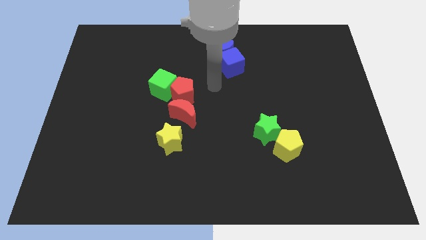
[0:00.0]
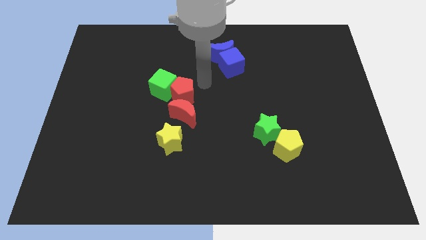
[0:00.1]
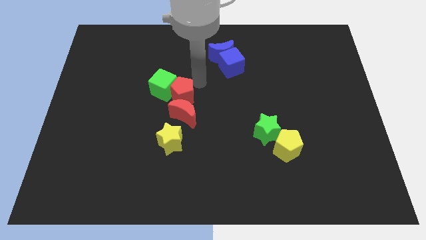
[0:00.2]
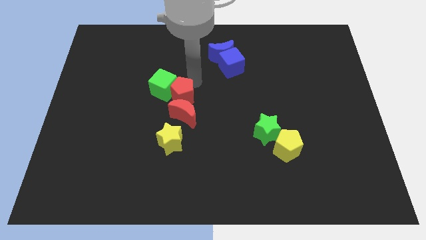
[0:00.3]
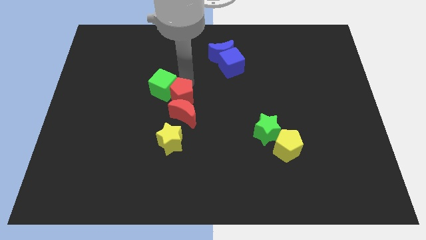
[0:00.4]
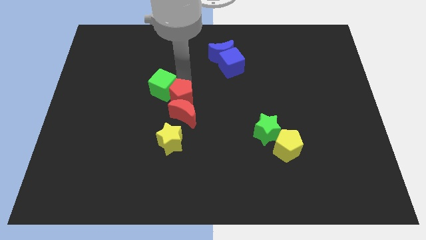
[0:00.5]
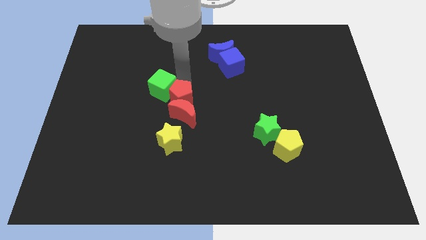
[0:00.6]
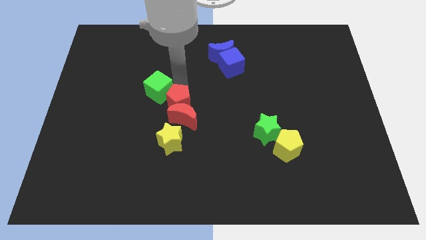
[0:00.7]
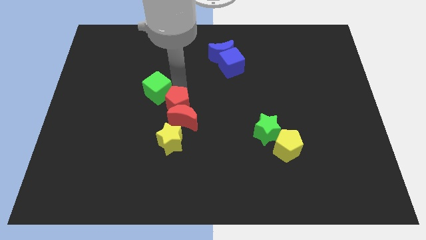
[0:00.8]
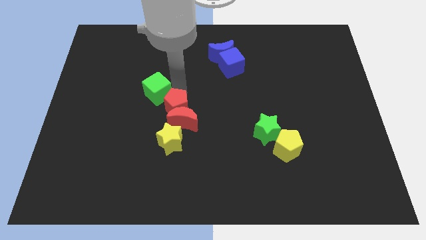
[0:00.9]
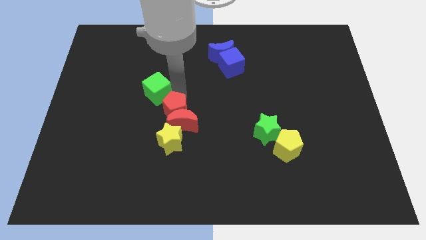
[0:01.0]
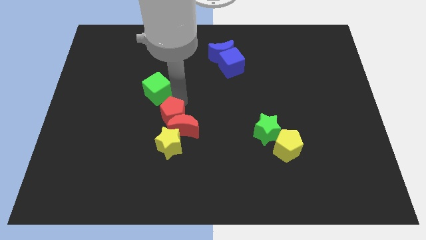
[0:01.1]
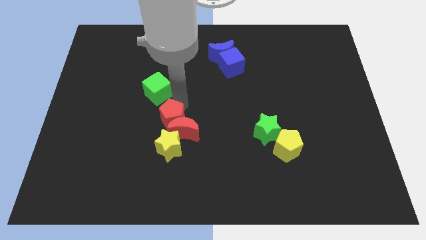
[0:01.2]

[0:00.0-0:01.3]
move the pentagon into the red moon

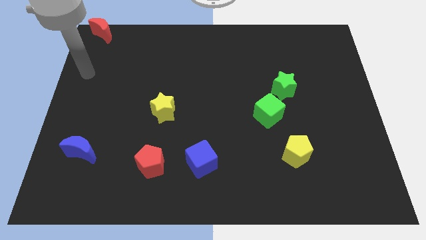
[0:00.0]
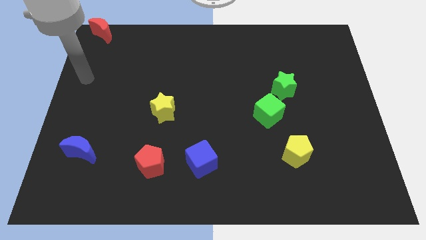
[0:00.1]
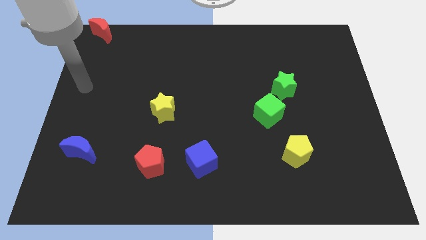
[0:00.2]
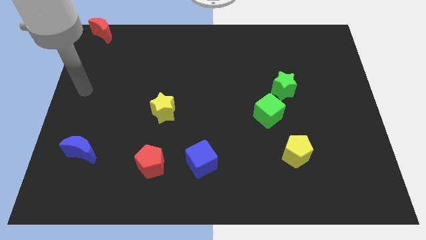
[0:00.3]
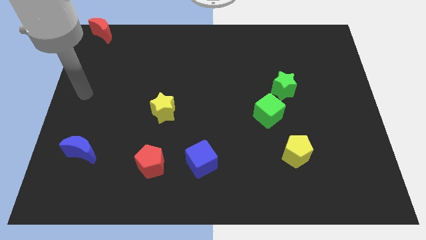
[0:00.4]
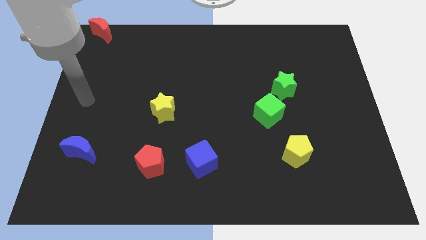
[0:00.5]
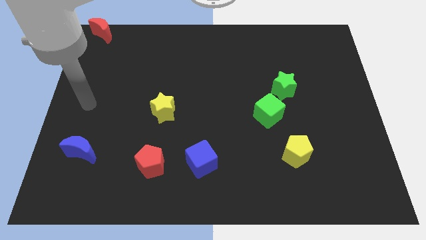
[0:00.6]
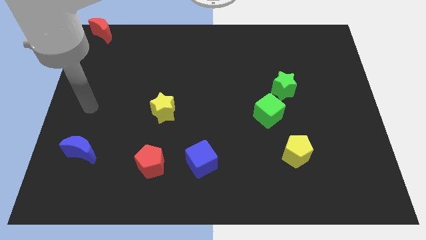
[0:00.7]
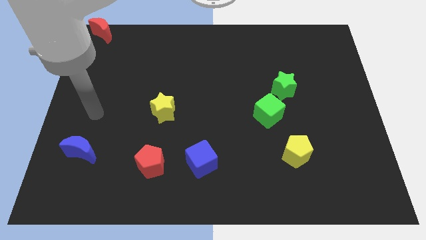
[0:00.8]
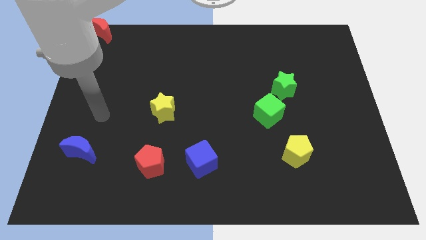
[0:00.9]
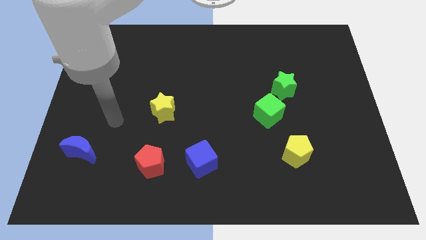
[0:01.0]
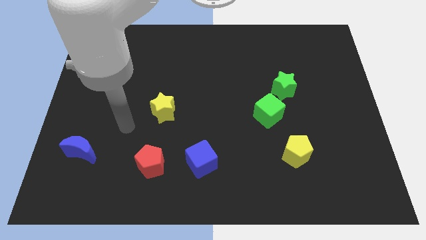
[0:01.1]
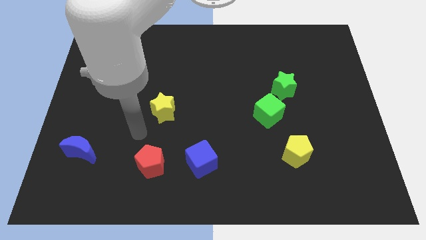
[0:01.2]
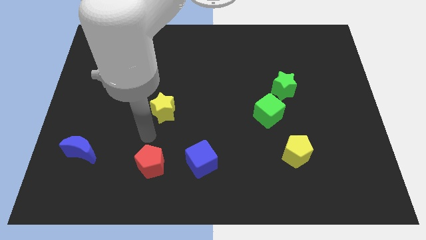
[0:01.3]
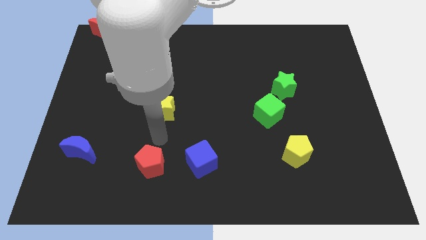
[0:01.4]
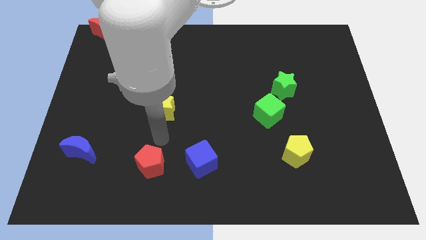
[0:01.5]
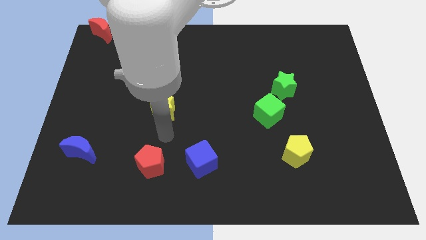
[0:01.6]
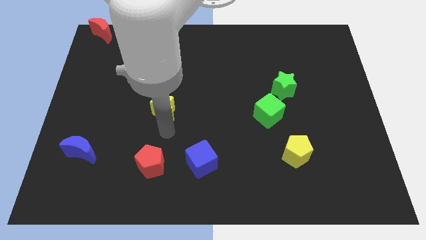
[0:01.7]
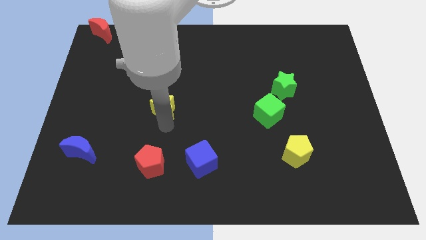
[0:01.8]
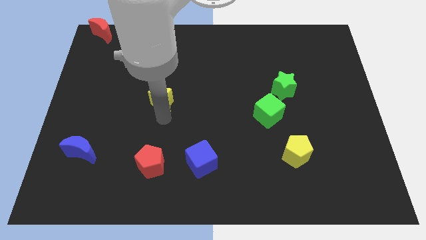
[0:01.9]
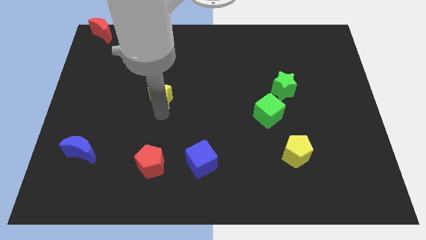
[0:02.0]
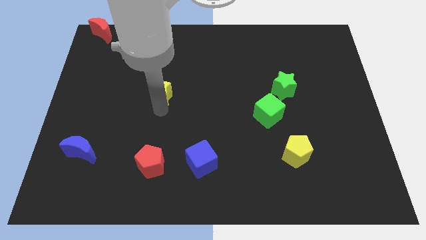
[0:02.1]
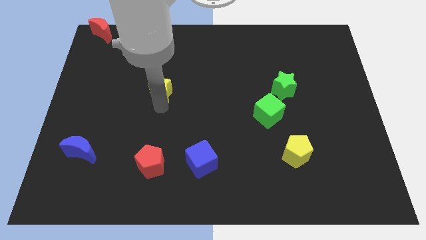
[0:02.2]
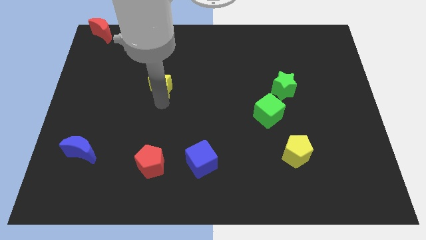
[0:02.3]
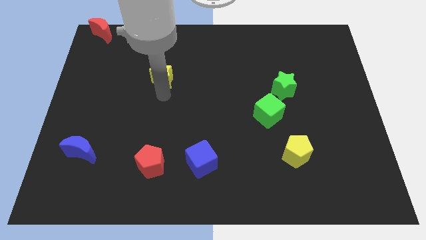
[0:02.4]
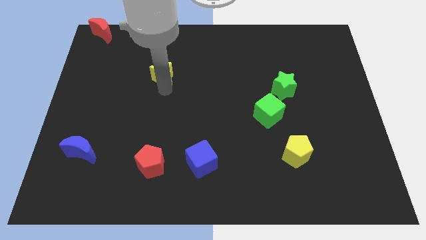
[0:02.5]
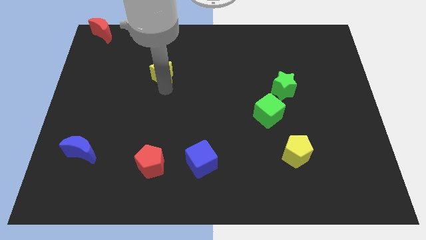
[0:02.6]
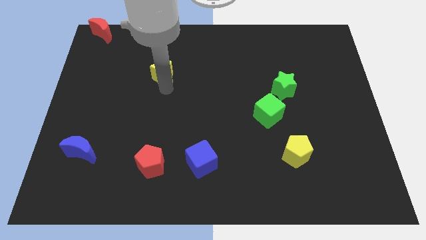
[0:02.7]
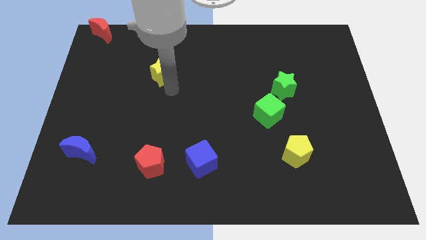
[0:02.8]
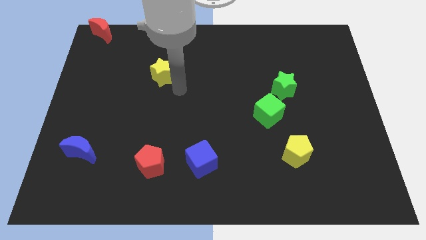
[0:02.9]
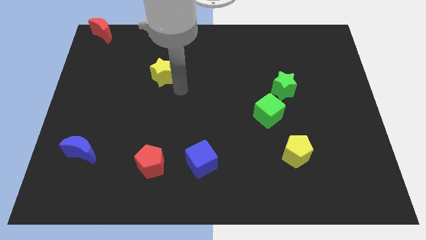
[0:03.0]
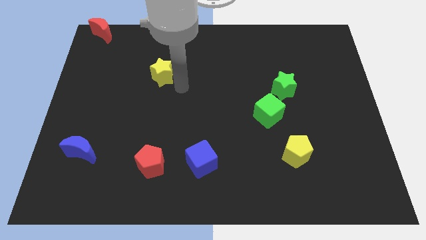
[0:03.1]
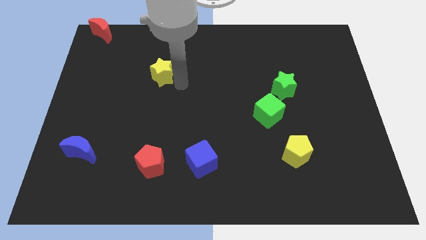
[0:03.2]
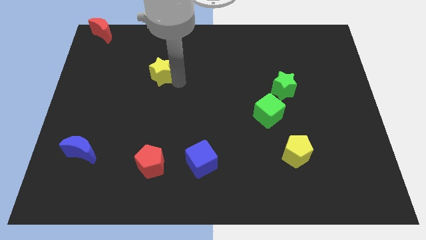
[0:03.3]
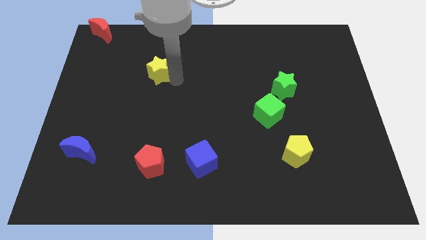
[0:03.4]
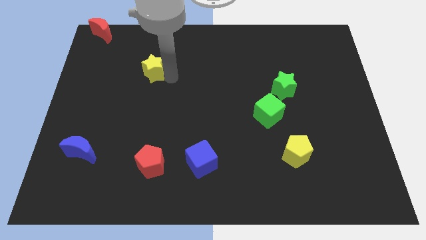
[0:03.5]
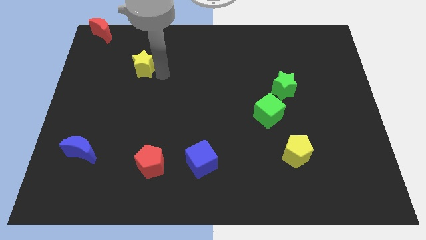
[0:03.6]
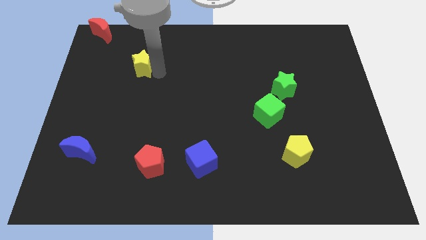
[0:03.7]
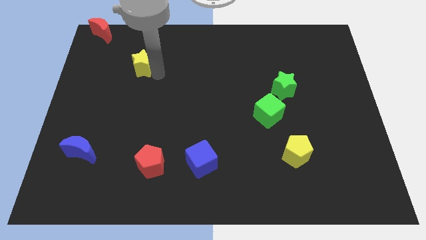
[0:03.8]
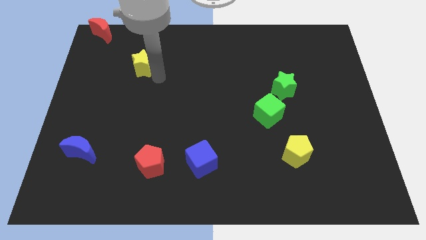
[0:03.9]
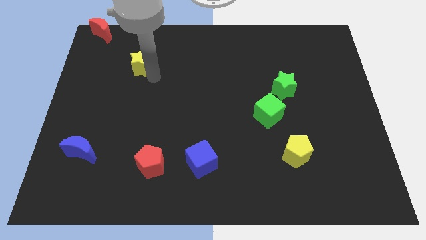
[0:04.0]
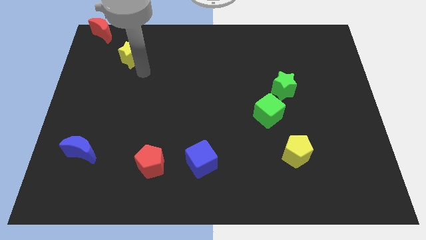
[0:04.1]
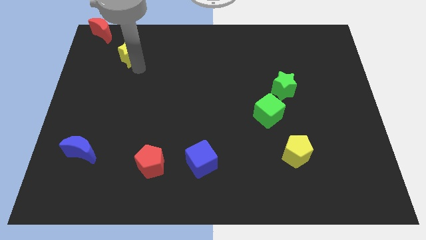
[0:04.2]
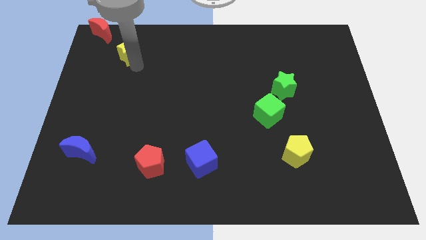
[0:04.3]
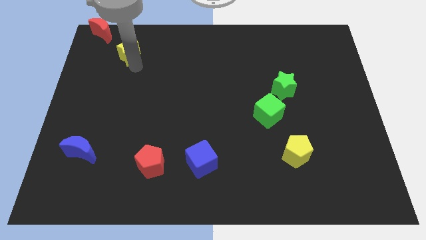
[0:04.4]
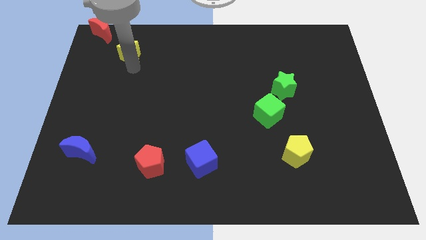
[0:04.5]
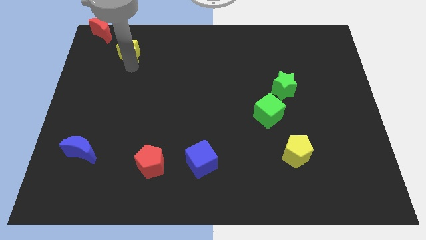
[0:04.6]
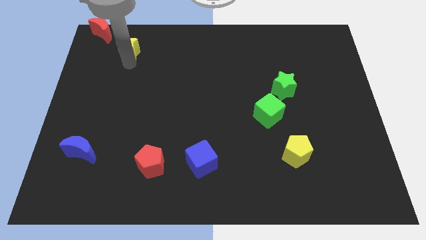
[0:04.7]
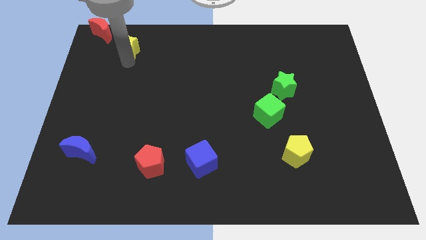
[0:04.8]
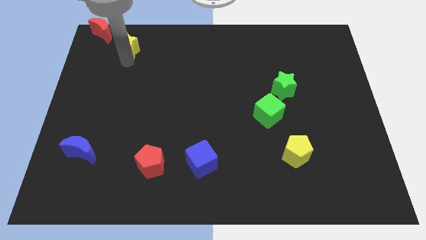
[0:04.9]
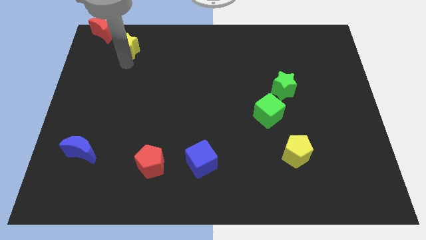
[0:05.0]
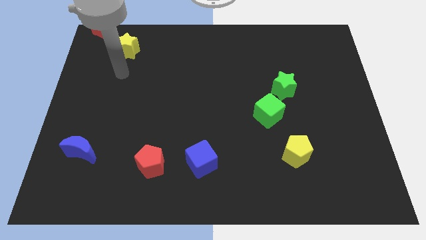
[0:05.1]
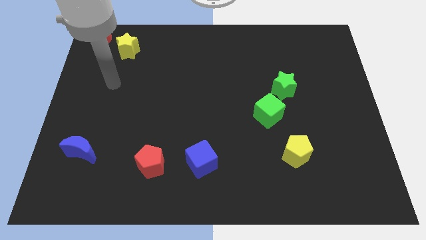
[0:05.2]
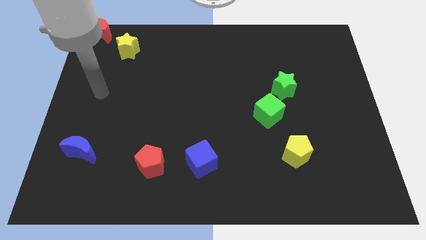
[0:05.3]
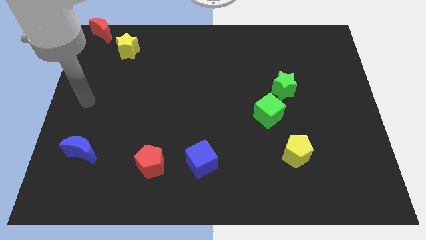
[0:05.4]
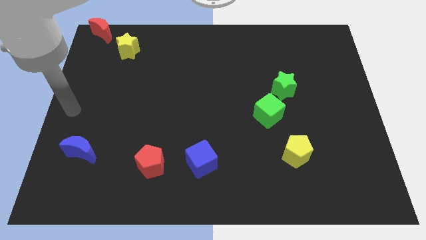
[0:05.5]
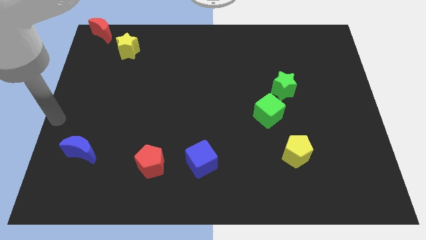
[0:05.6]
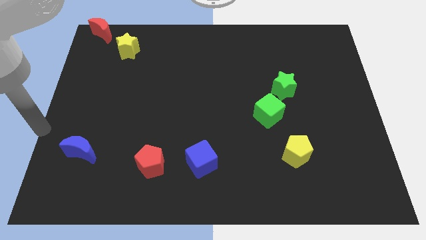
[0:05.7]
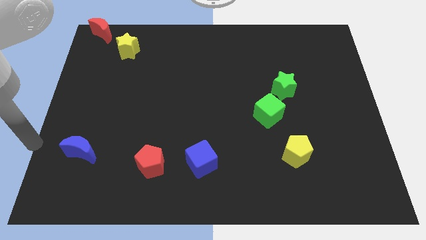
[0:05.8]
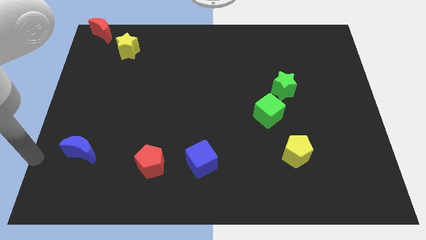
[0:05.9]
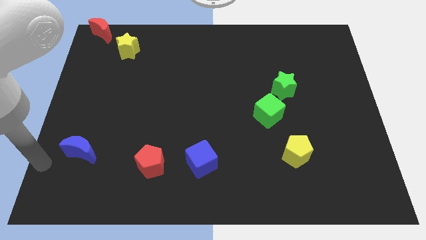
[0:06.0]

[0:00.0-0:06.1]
move yellow star diagonally below the red moon

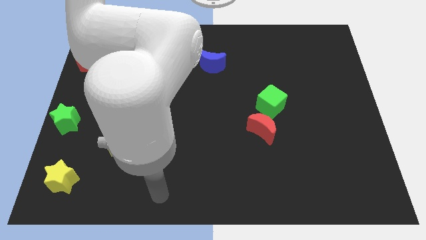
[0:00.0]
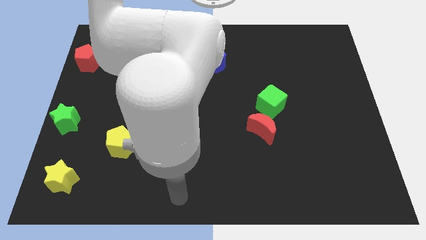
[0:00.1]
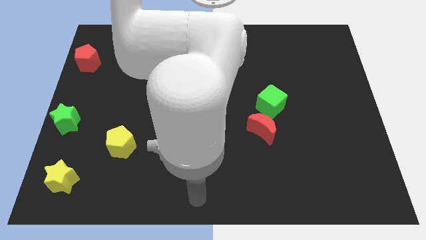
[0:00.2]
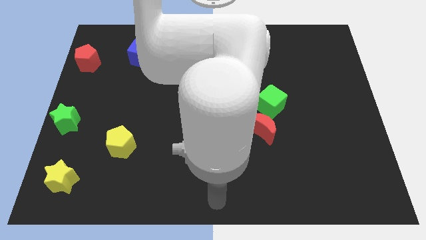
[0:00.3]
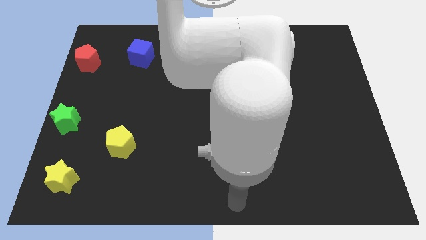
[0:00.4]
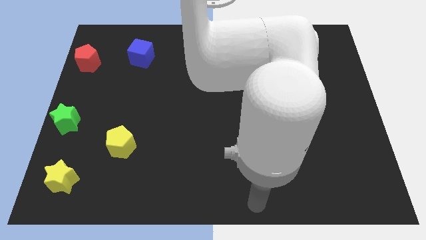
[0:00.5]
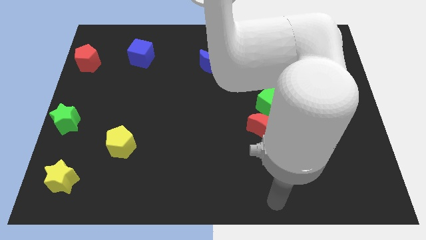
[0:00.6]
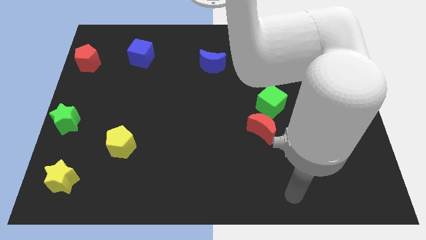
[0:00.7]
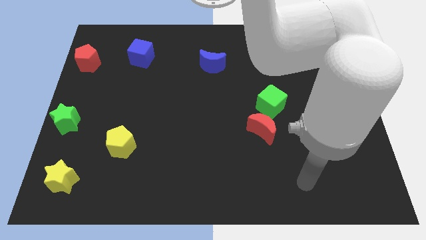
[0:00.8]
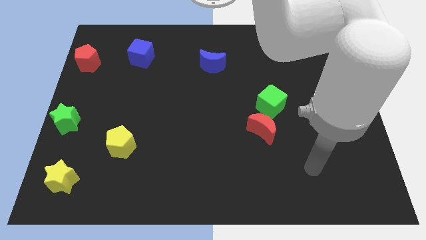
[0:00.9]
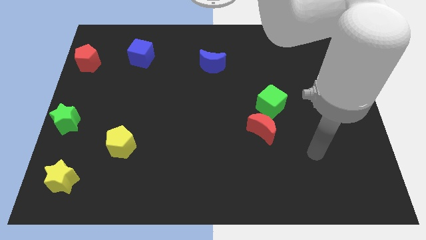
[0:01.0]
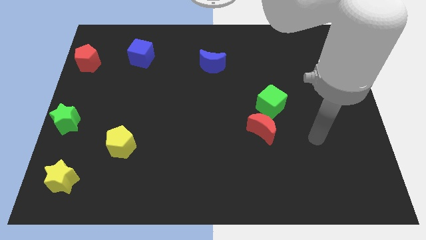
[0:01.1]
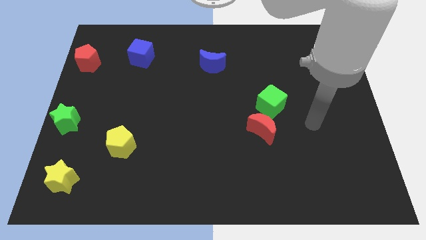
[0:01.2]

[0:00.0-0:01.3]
point the arm to the right of the red moon

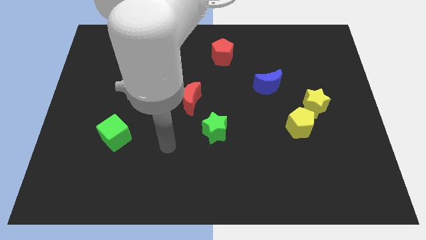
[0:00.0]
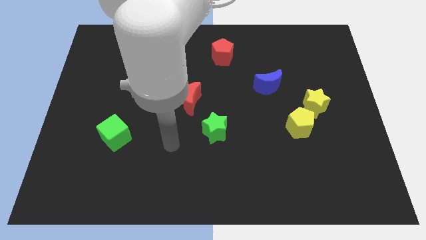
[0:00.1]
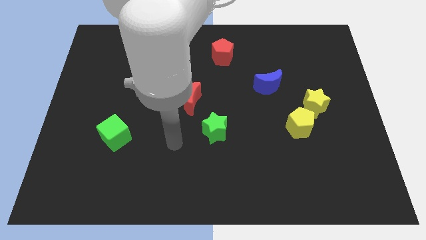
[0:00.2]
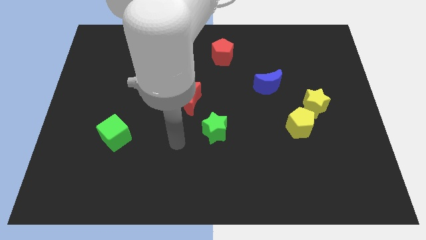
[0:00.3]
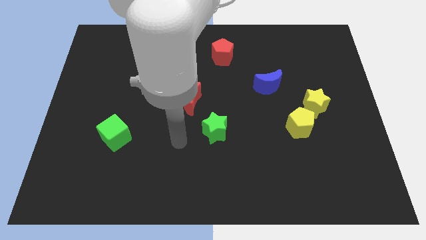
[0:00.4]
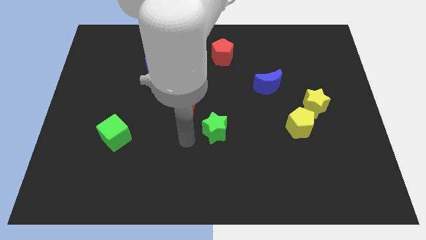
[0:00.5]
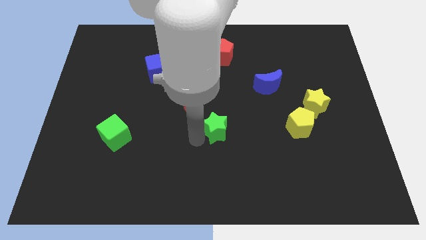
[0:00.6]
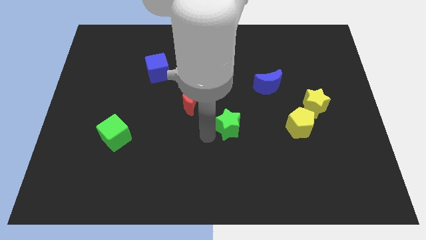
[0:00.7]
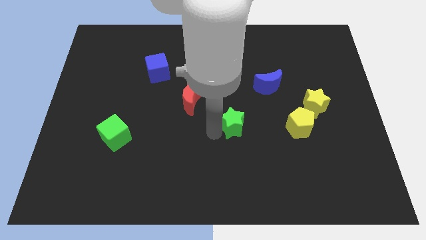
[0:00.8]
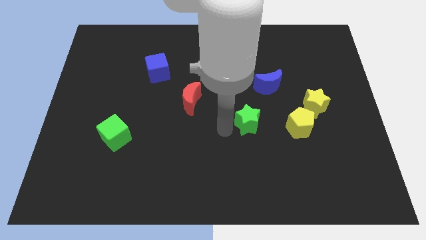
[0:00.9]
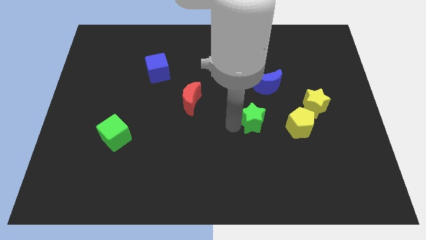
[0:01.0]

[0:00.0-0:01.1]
move the green star to the left of the yellow pentagon
